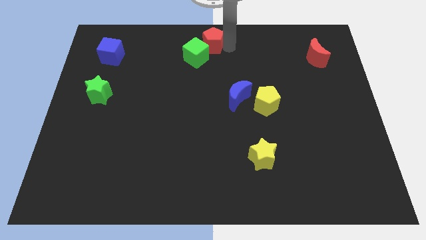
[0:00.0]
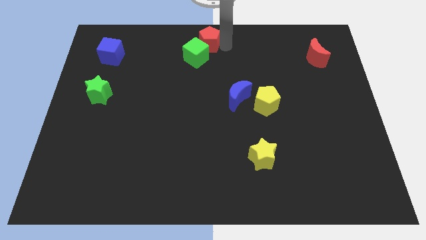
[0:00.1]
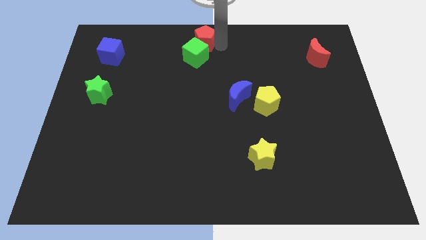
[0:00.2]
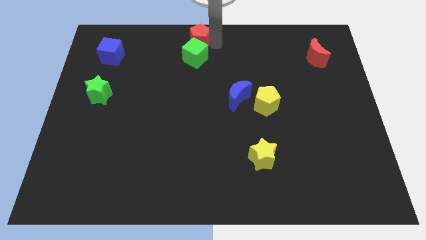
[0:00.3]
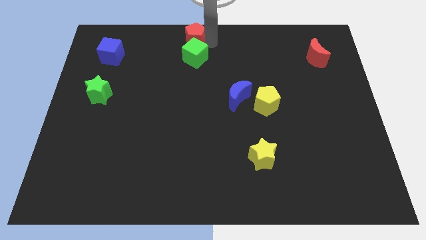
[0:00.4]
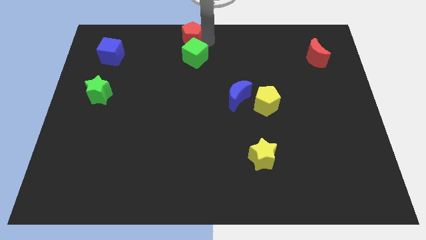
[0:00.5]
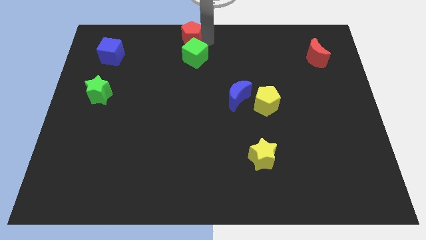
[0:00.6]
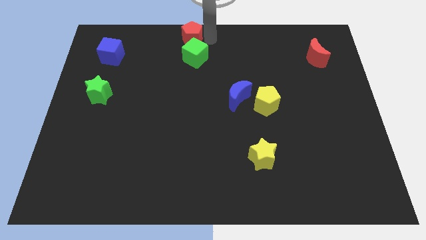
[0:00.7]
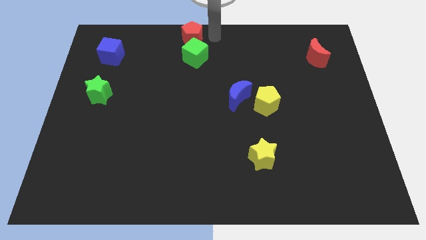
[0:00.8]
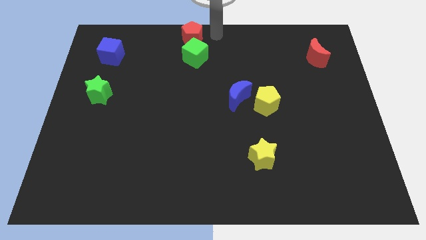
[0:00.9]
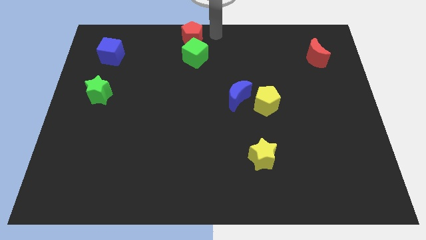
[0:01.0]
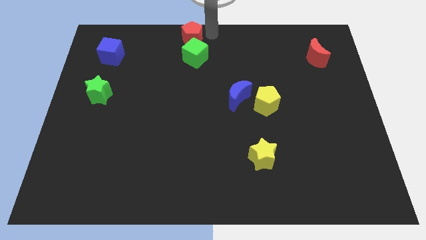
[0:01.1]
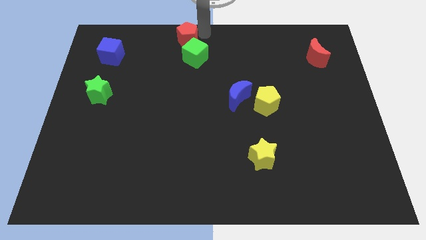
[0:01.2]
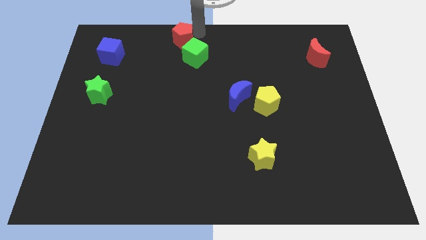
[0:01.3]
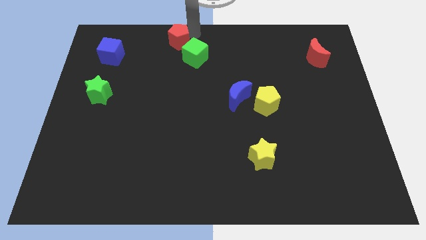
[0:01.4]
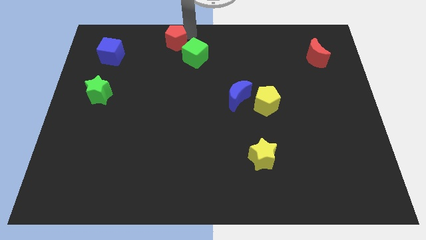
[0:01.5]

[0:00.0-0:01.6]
slide the red pentagon to the top left of the green cube

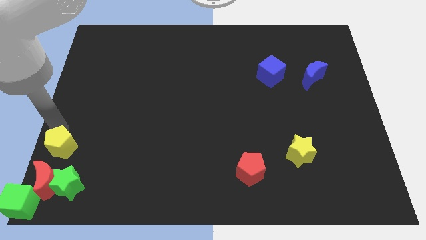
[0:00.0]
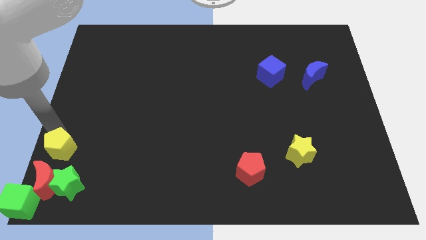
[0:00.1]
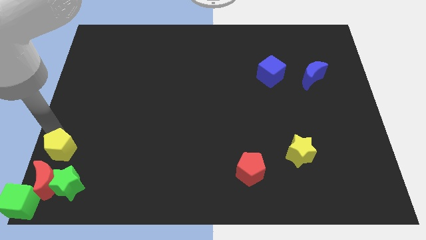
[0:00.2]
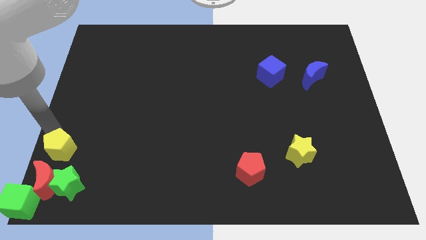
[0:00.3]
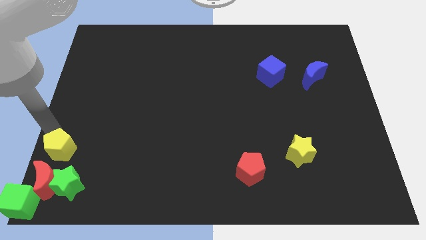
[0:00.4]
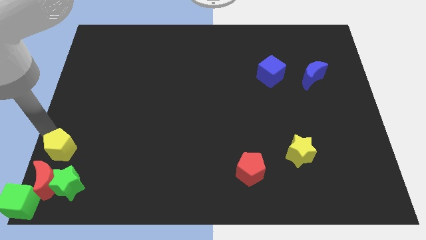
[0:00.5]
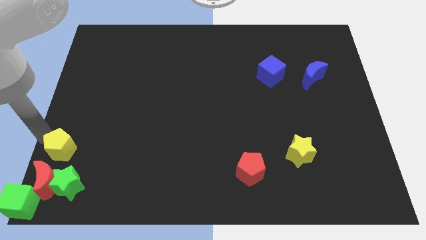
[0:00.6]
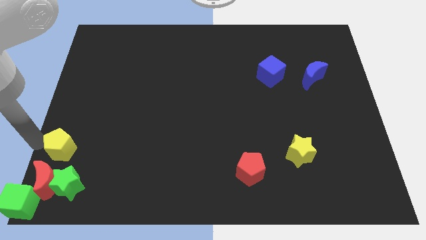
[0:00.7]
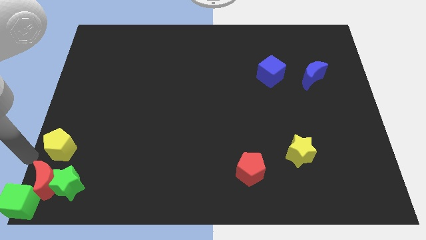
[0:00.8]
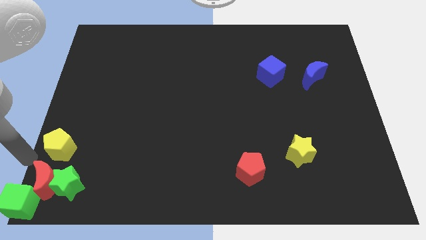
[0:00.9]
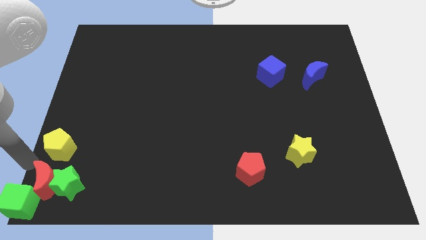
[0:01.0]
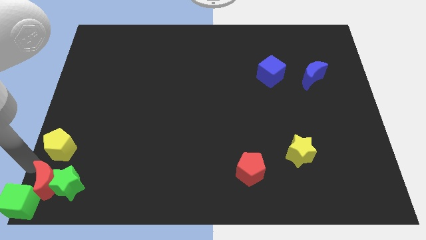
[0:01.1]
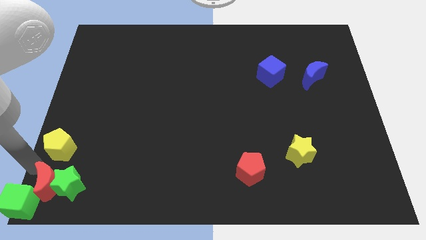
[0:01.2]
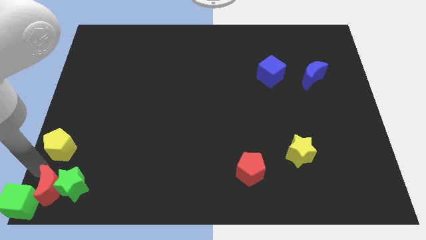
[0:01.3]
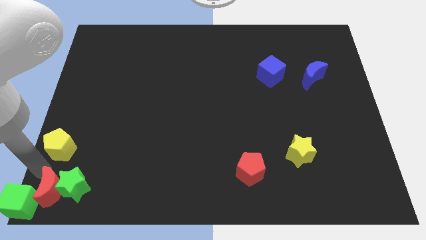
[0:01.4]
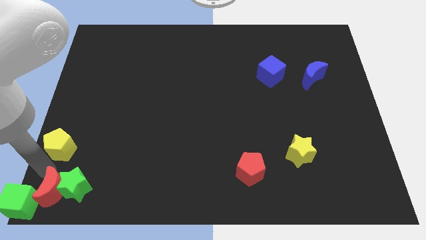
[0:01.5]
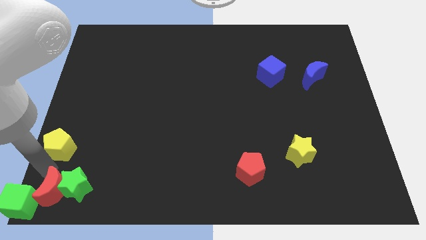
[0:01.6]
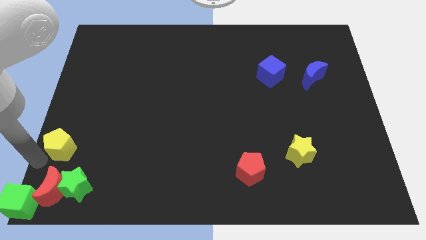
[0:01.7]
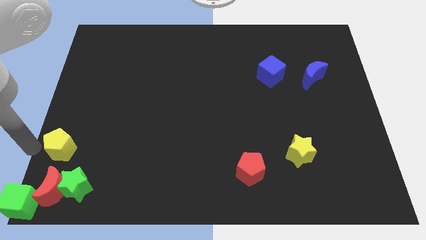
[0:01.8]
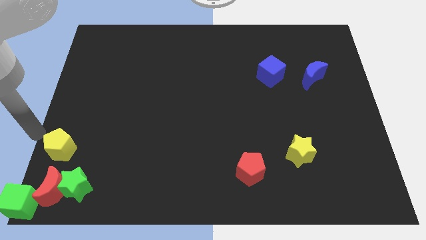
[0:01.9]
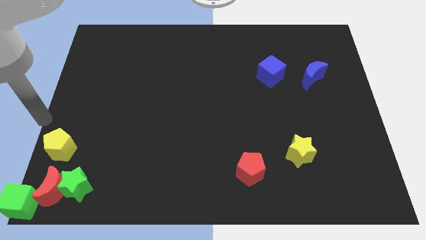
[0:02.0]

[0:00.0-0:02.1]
move the red crescent slightly into the green star

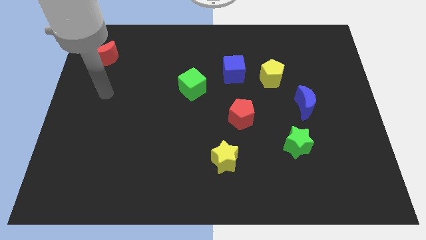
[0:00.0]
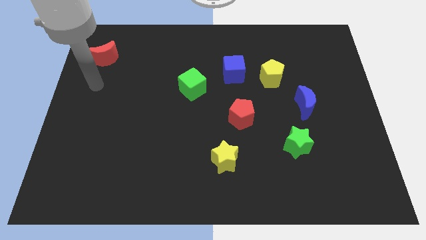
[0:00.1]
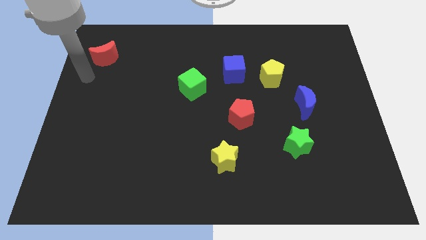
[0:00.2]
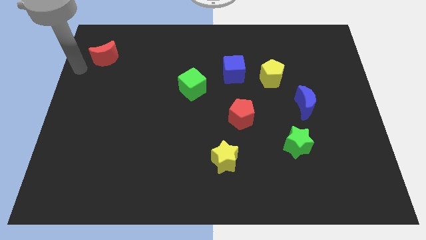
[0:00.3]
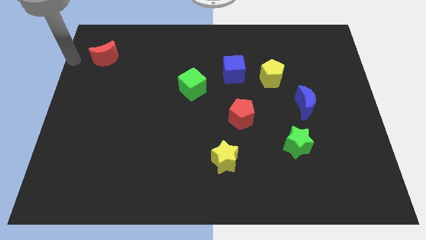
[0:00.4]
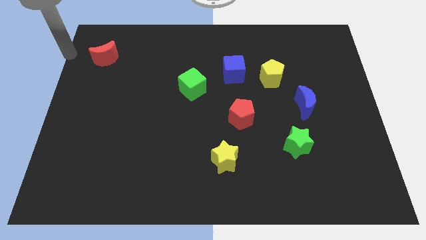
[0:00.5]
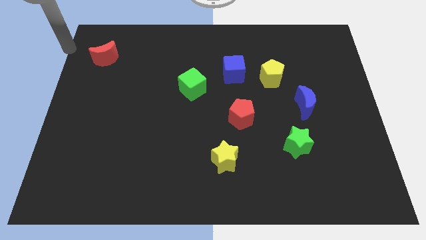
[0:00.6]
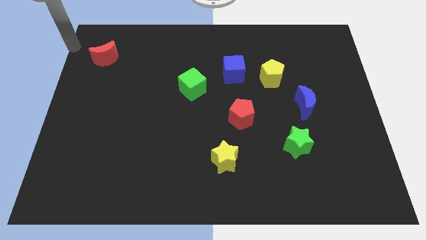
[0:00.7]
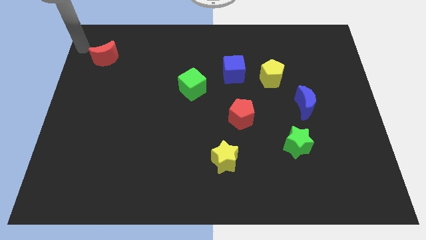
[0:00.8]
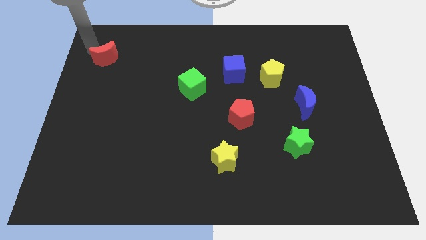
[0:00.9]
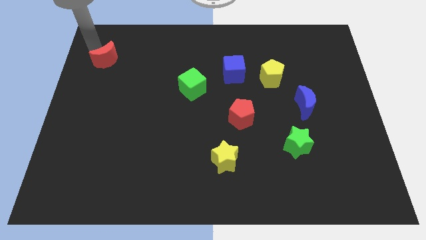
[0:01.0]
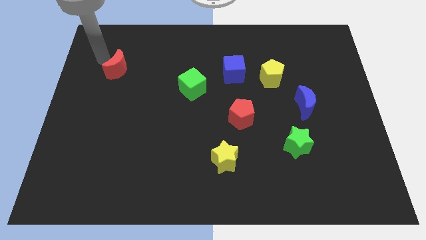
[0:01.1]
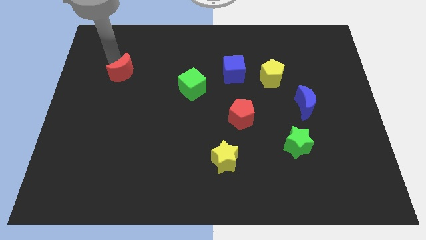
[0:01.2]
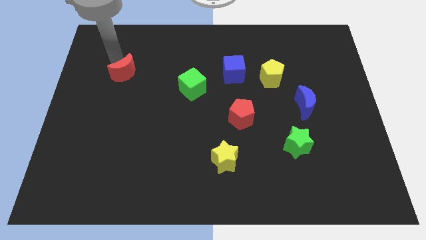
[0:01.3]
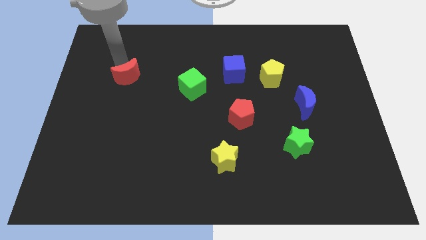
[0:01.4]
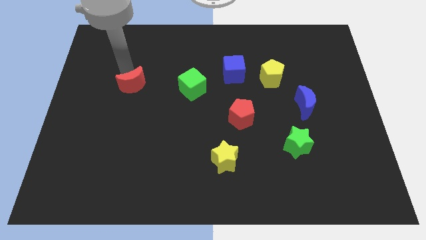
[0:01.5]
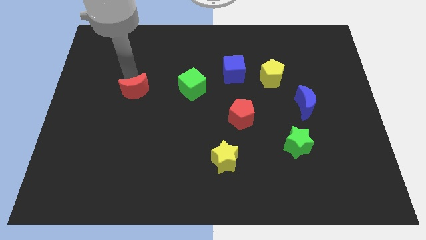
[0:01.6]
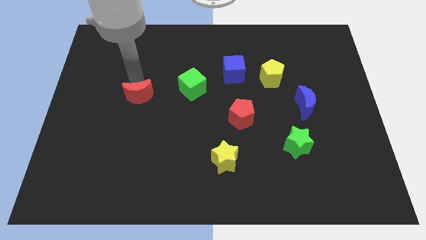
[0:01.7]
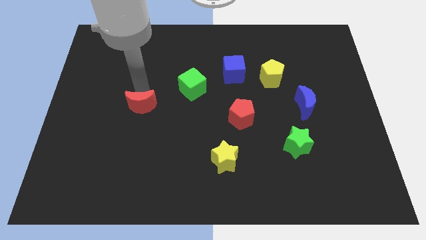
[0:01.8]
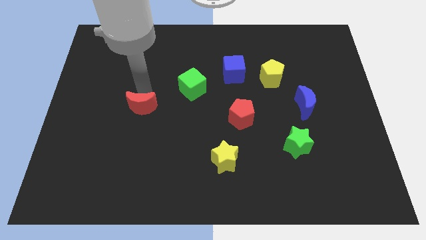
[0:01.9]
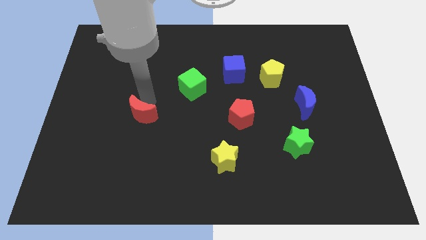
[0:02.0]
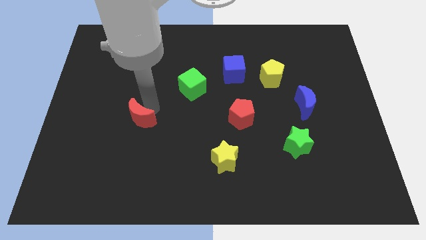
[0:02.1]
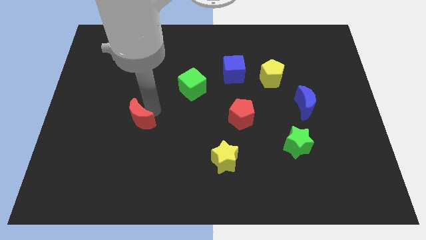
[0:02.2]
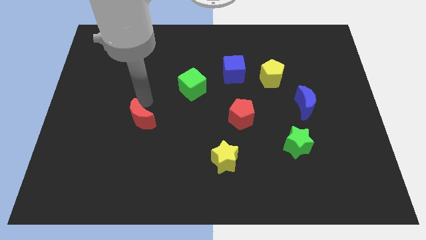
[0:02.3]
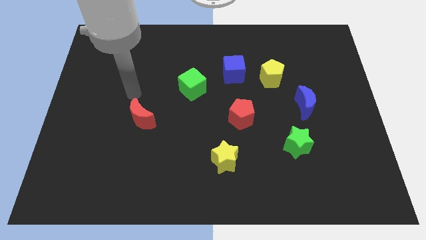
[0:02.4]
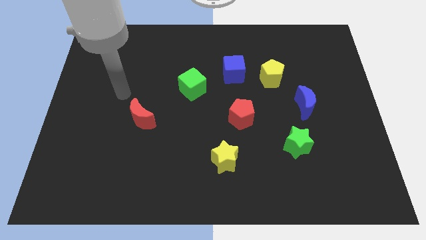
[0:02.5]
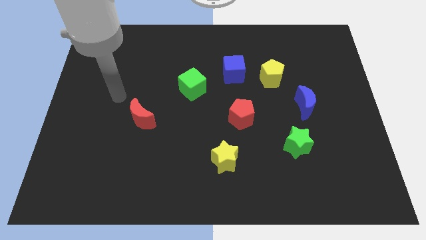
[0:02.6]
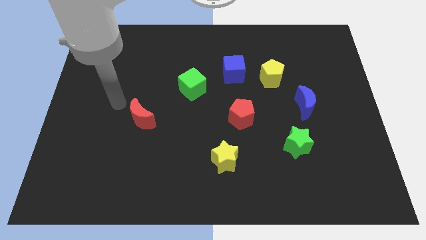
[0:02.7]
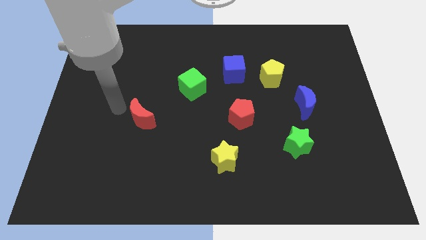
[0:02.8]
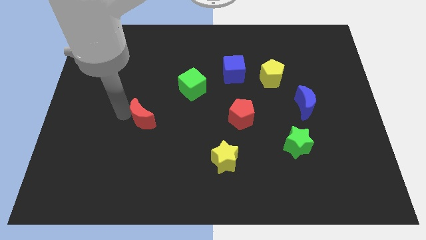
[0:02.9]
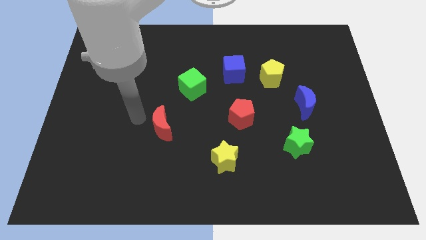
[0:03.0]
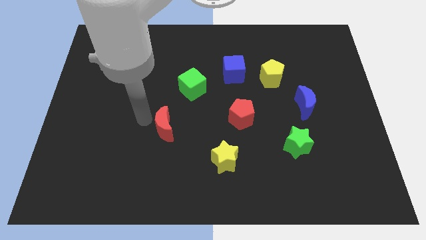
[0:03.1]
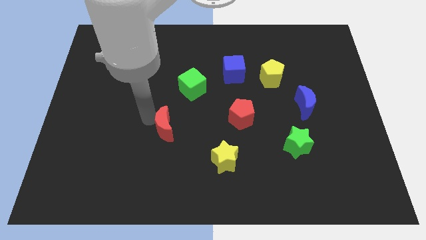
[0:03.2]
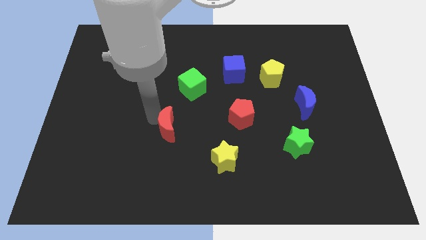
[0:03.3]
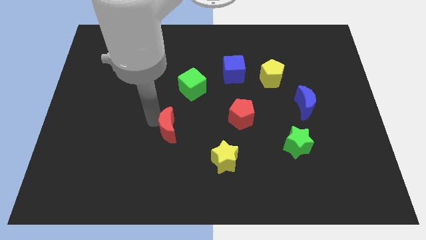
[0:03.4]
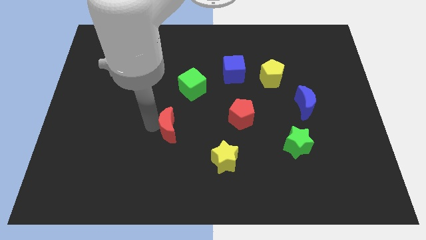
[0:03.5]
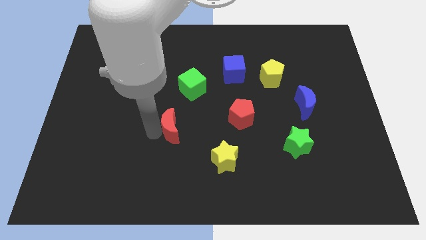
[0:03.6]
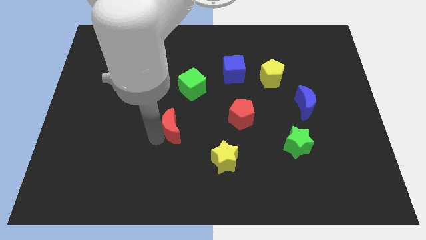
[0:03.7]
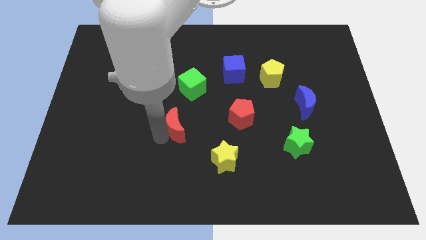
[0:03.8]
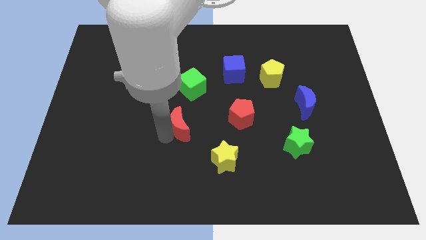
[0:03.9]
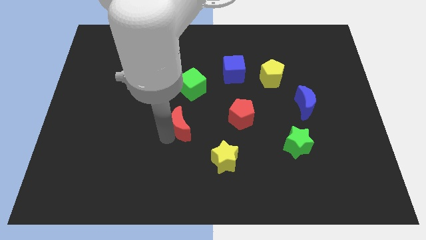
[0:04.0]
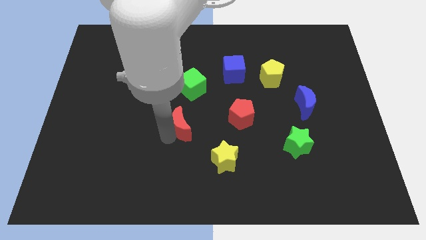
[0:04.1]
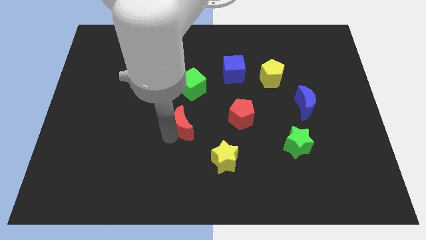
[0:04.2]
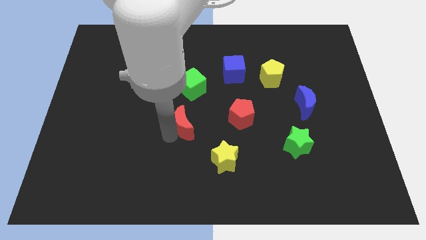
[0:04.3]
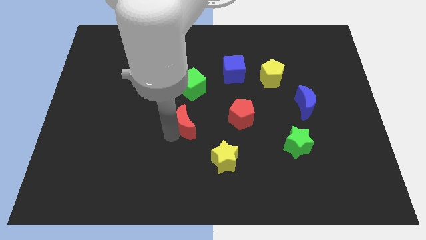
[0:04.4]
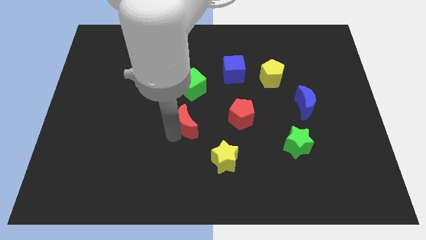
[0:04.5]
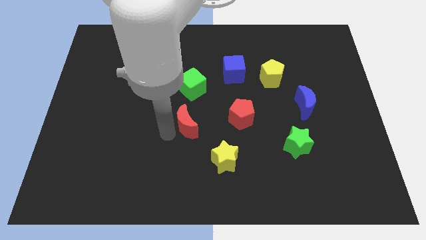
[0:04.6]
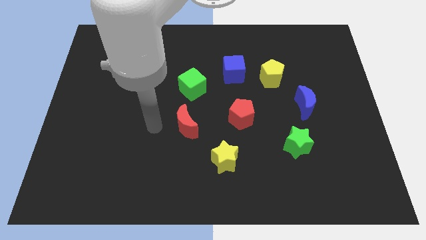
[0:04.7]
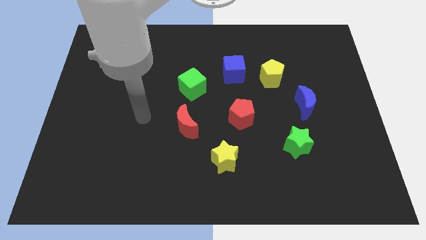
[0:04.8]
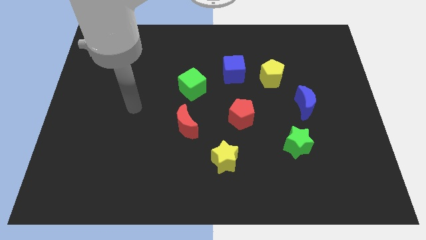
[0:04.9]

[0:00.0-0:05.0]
place the red moon in between the green cube and yellow star to form a circle

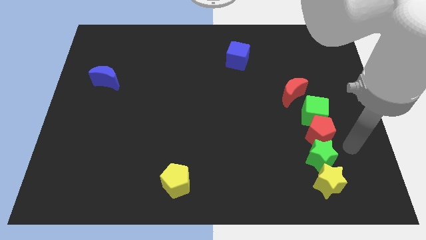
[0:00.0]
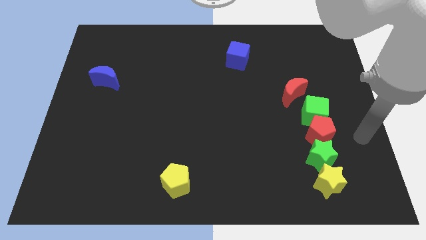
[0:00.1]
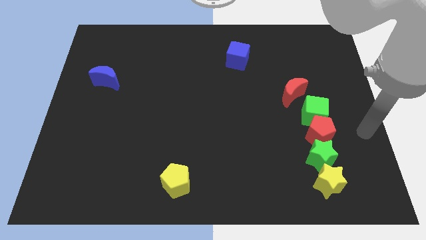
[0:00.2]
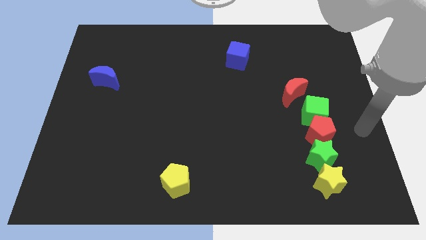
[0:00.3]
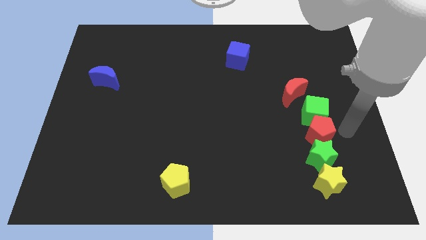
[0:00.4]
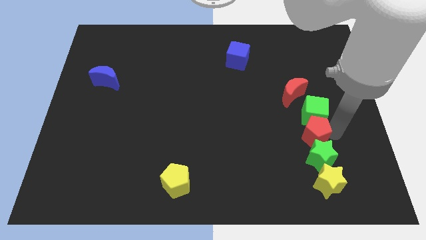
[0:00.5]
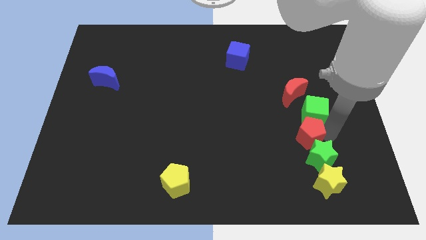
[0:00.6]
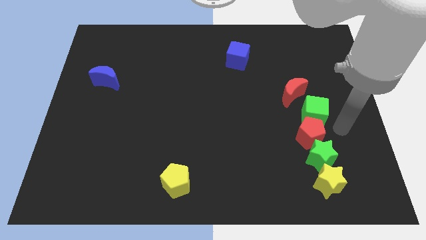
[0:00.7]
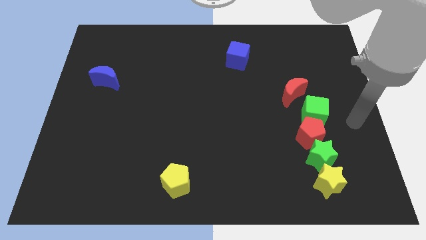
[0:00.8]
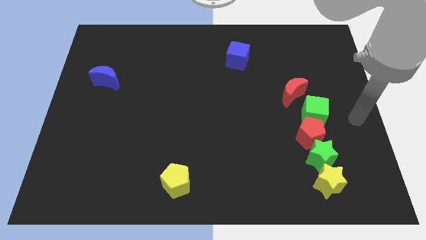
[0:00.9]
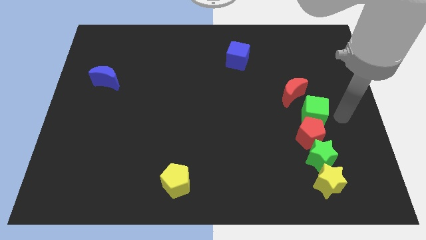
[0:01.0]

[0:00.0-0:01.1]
push red pentagon to its left
